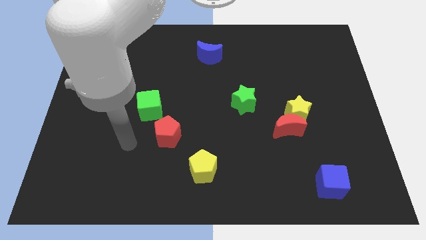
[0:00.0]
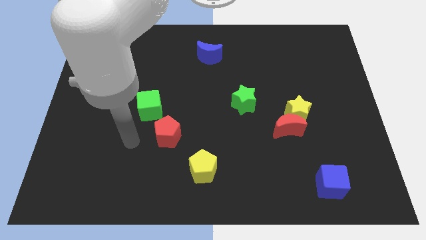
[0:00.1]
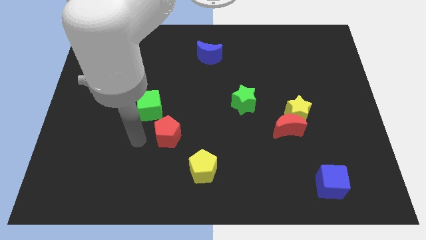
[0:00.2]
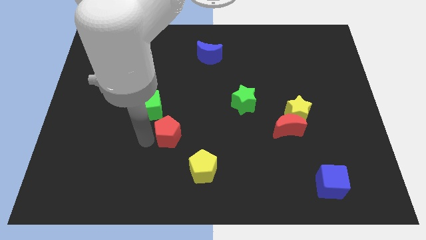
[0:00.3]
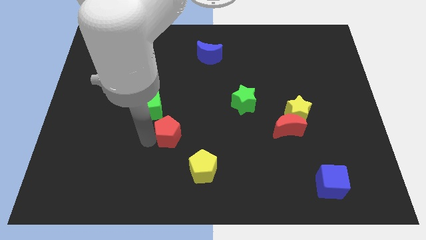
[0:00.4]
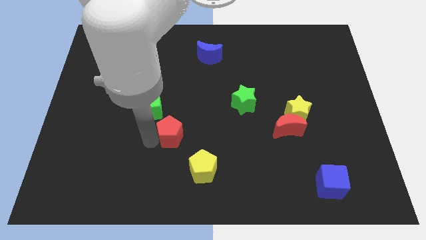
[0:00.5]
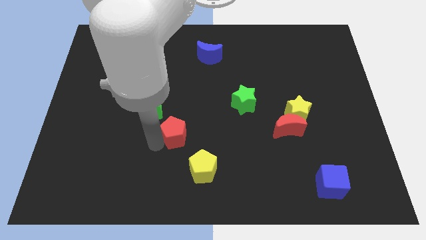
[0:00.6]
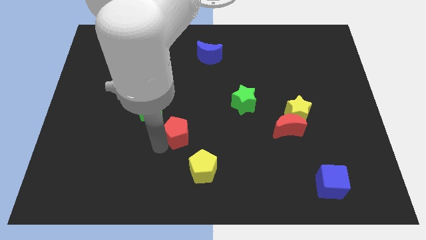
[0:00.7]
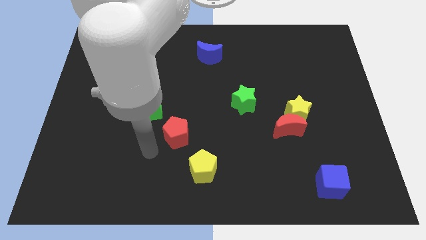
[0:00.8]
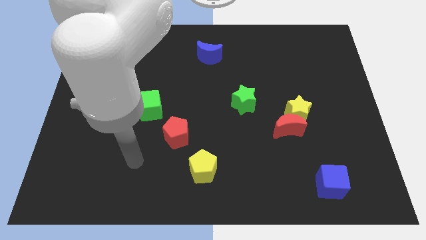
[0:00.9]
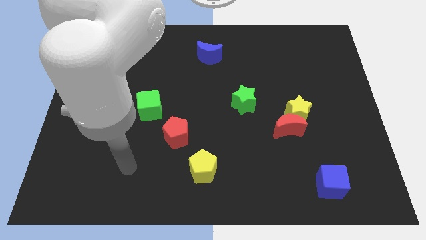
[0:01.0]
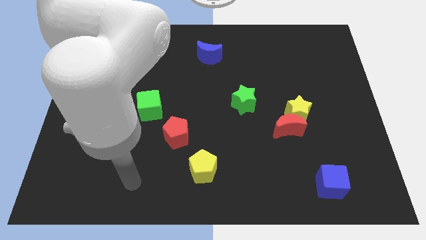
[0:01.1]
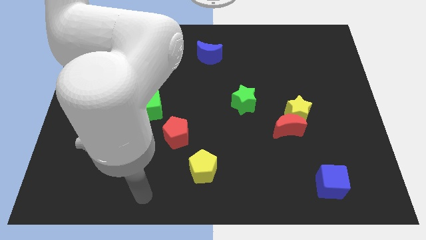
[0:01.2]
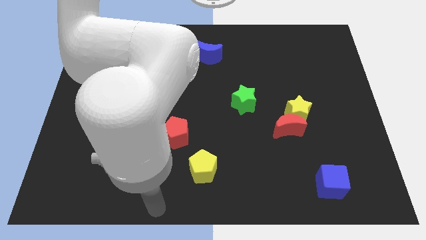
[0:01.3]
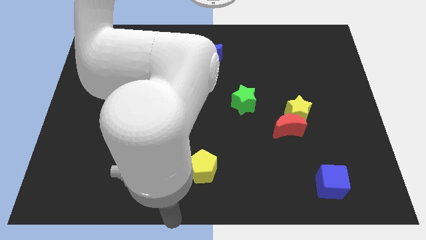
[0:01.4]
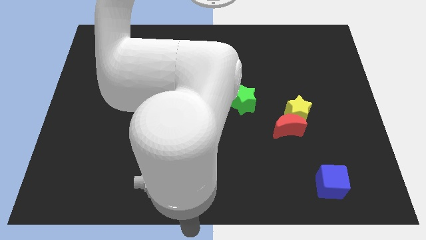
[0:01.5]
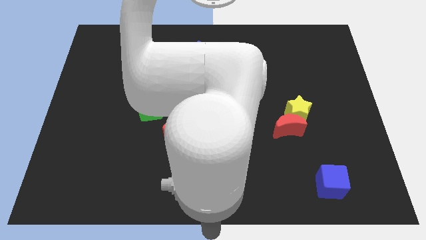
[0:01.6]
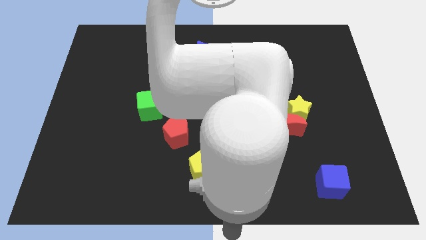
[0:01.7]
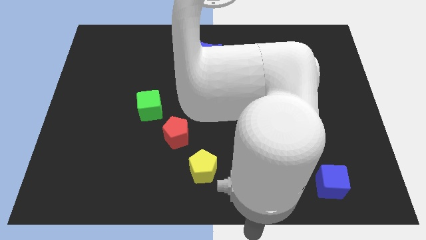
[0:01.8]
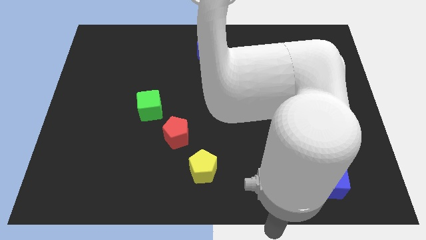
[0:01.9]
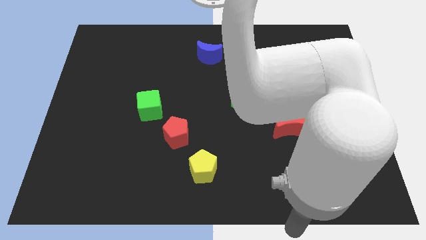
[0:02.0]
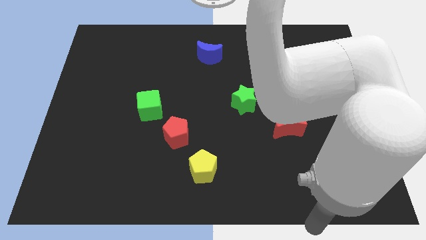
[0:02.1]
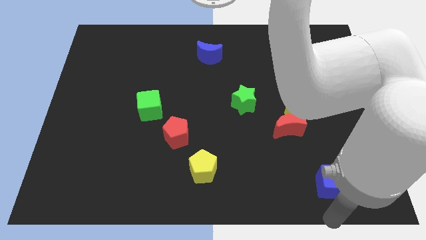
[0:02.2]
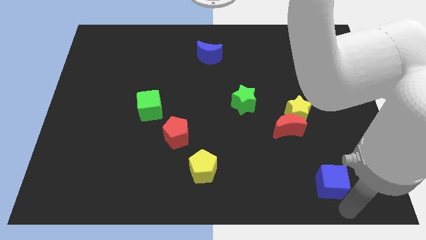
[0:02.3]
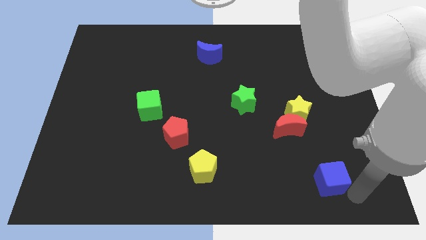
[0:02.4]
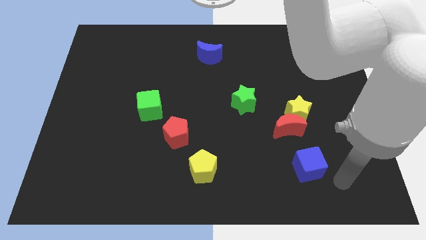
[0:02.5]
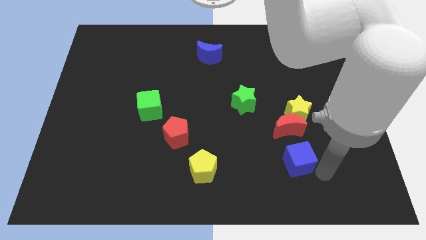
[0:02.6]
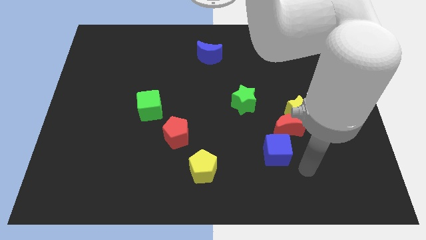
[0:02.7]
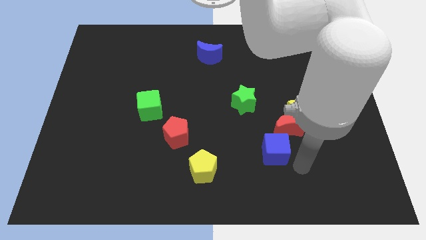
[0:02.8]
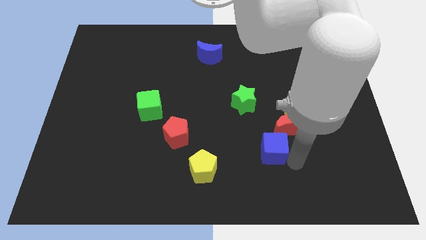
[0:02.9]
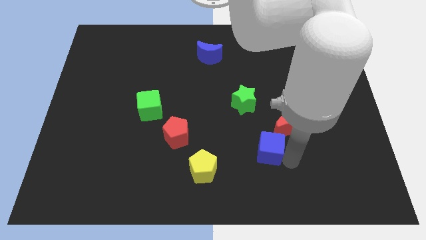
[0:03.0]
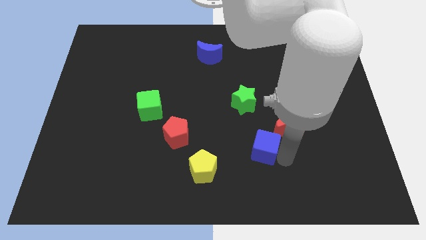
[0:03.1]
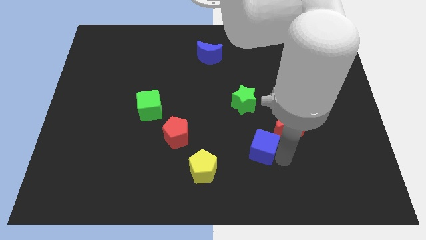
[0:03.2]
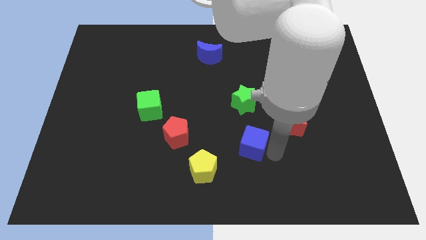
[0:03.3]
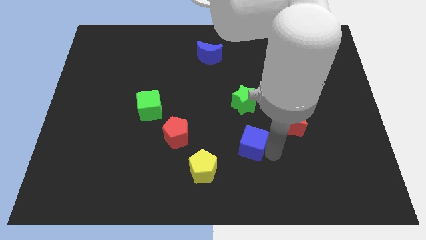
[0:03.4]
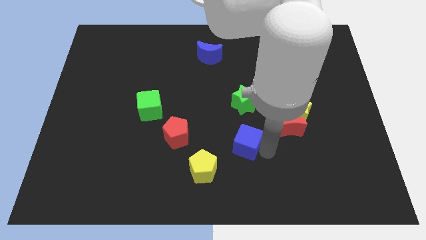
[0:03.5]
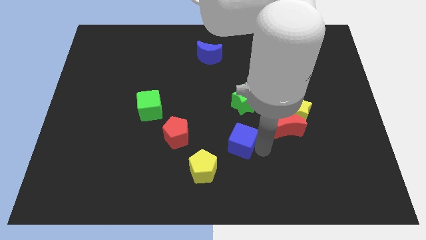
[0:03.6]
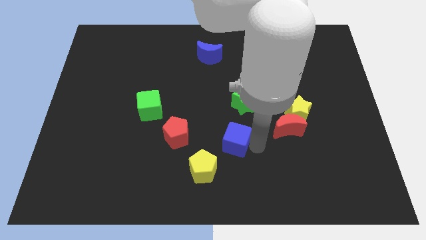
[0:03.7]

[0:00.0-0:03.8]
move the blue cube towards the center

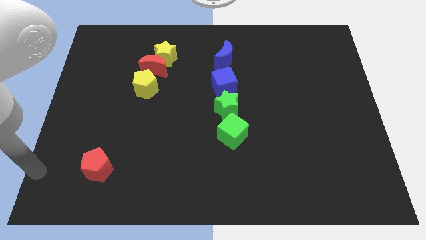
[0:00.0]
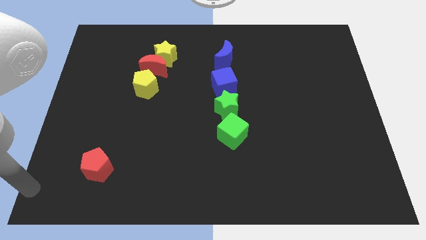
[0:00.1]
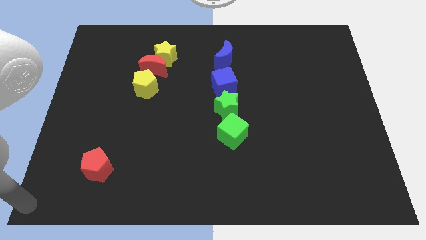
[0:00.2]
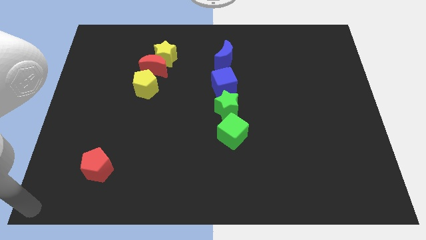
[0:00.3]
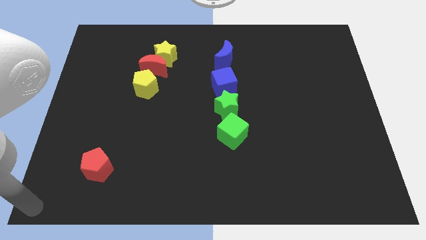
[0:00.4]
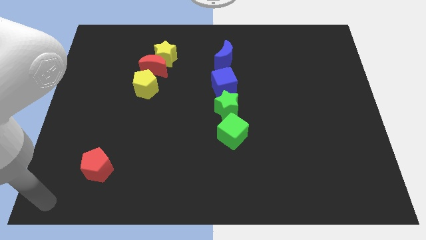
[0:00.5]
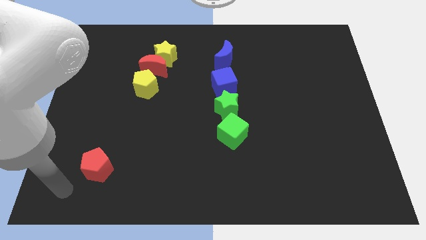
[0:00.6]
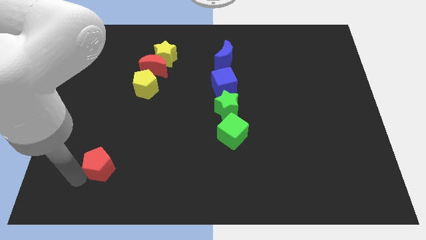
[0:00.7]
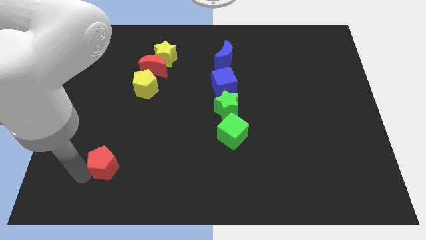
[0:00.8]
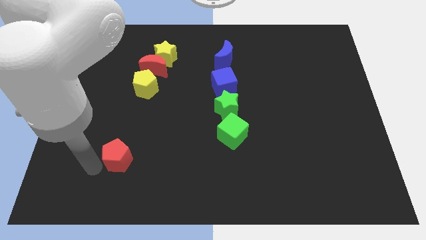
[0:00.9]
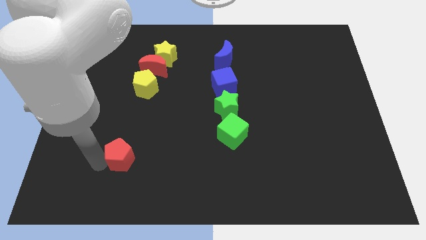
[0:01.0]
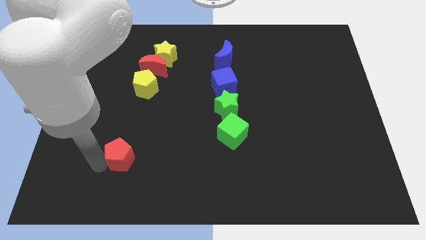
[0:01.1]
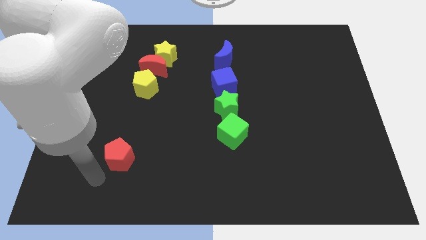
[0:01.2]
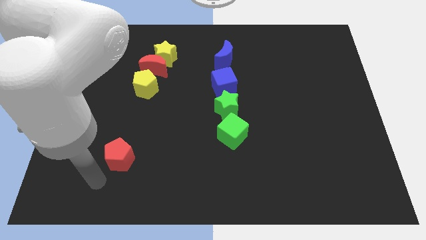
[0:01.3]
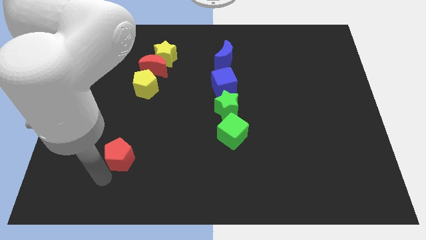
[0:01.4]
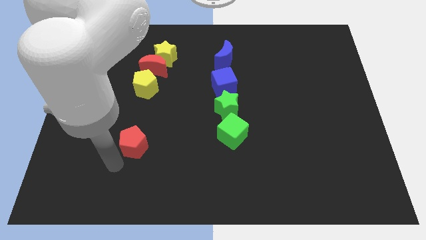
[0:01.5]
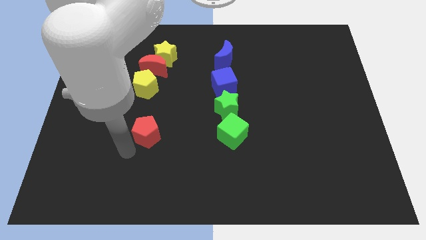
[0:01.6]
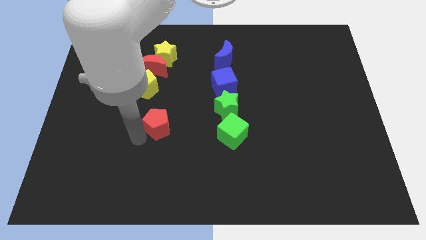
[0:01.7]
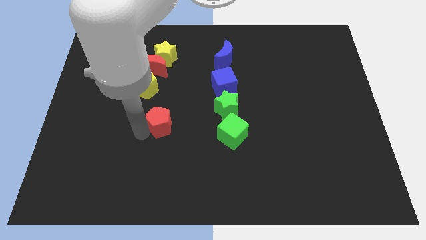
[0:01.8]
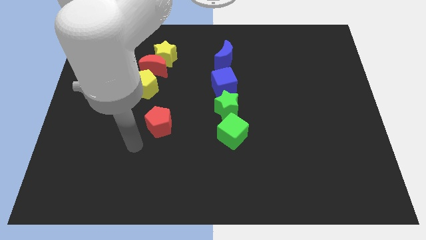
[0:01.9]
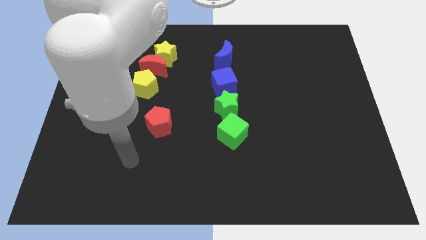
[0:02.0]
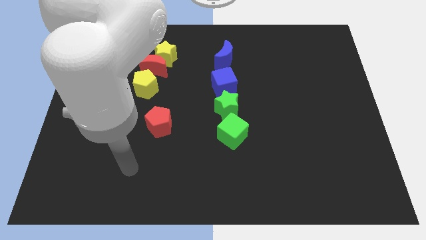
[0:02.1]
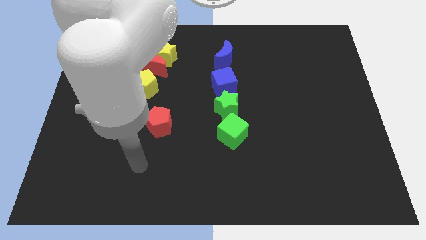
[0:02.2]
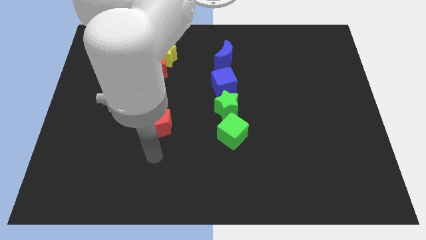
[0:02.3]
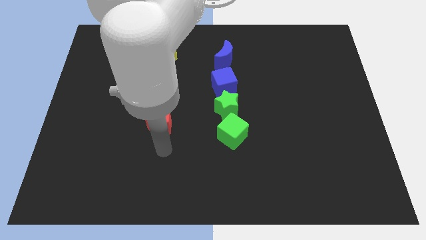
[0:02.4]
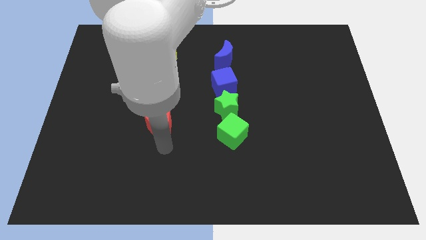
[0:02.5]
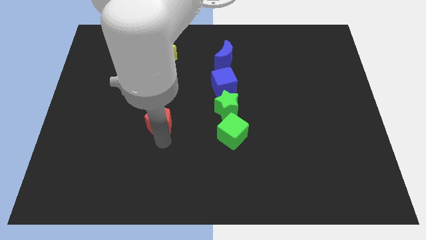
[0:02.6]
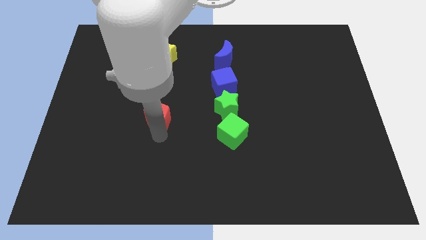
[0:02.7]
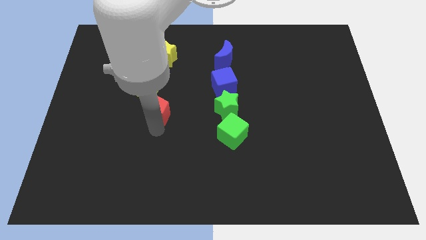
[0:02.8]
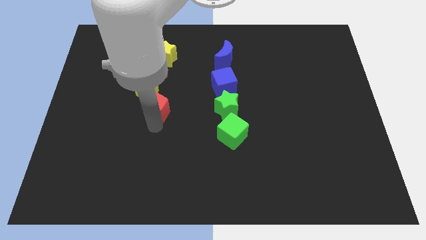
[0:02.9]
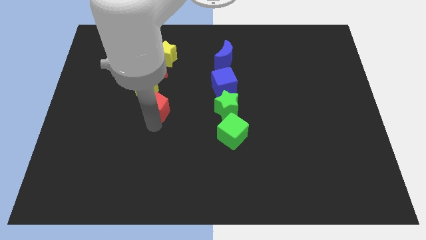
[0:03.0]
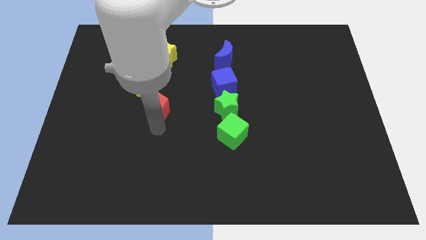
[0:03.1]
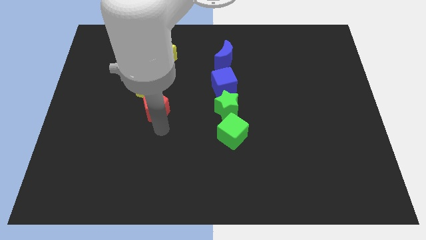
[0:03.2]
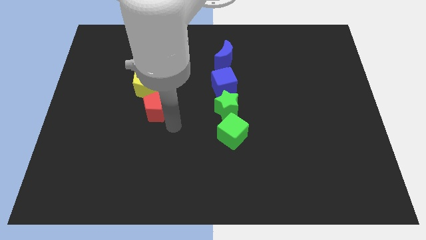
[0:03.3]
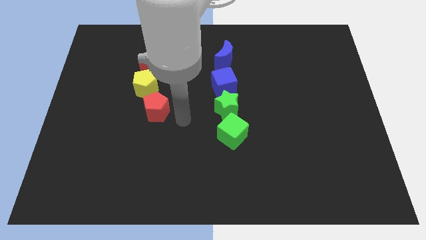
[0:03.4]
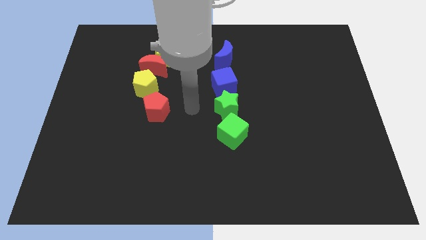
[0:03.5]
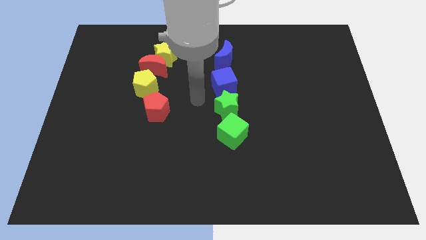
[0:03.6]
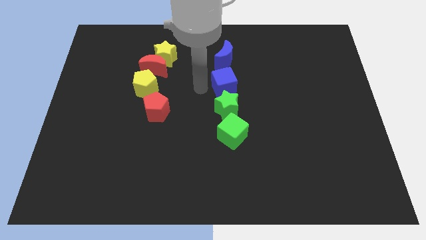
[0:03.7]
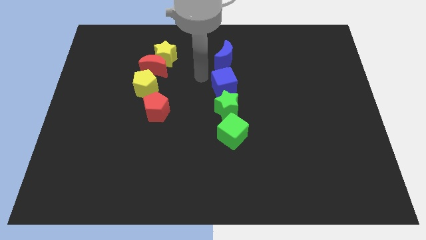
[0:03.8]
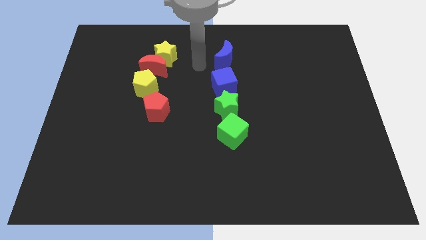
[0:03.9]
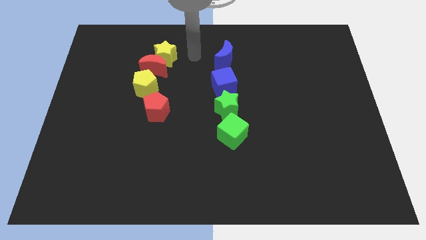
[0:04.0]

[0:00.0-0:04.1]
place the red pentagon below the yellow pentagon

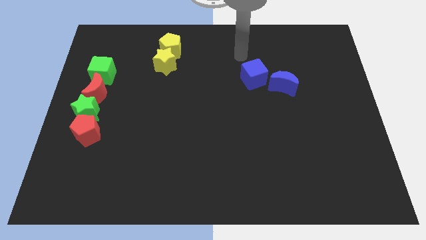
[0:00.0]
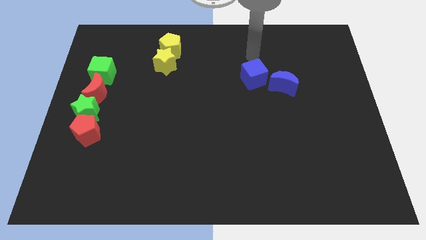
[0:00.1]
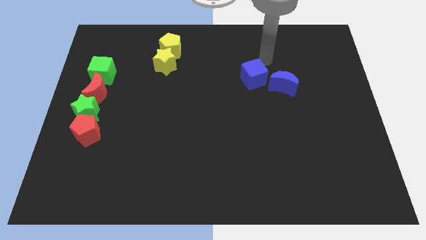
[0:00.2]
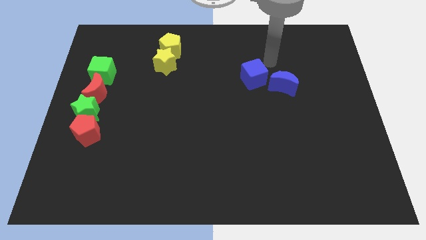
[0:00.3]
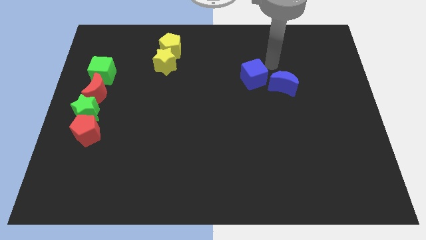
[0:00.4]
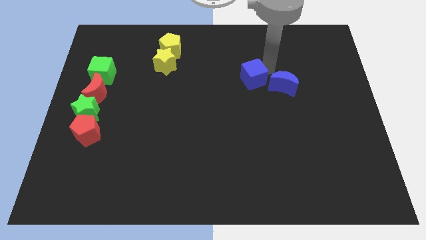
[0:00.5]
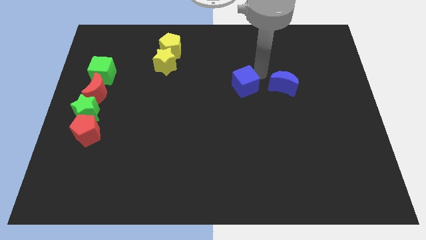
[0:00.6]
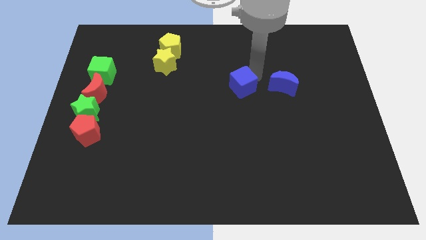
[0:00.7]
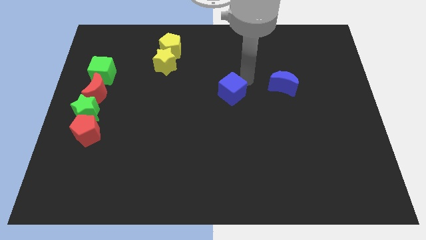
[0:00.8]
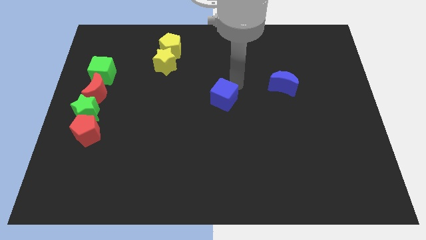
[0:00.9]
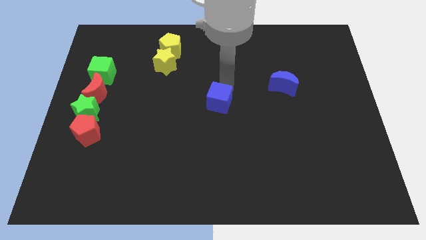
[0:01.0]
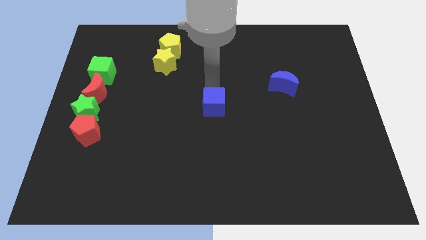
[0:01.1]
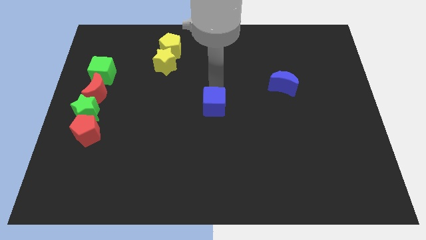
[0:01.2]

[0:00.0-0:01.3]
place blue cube in center
